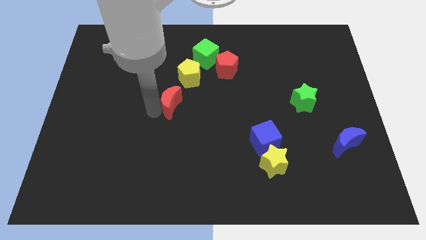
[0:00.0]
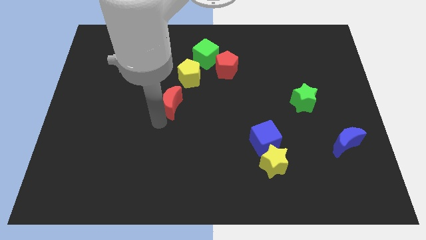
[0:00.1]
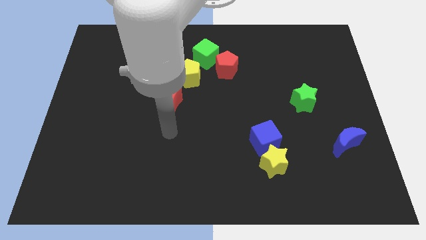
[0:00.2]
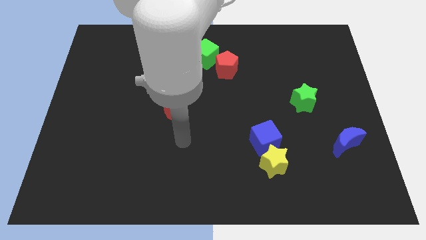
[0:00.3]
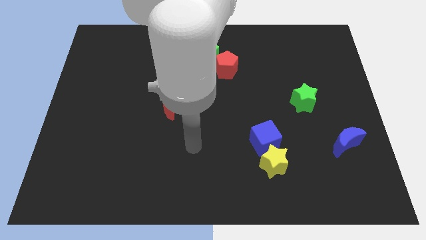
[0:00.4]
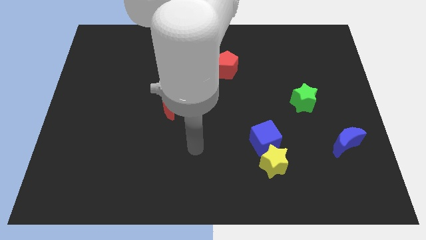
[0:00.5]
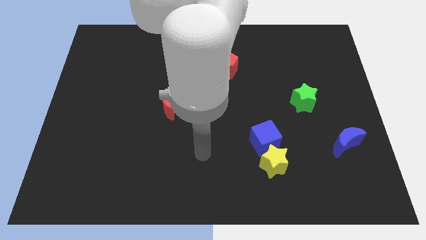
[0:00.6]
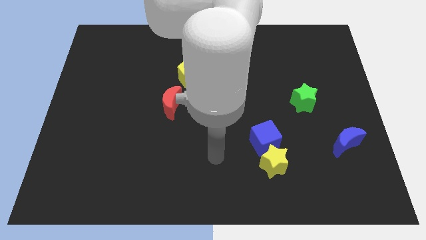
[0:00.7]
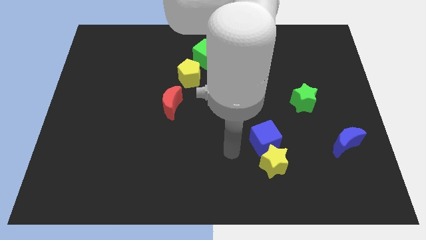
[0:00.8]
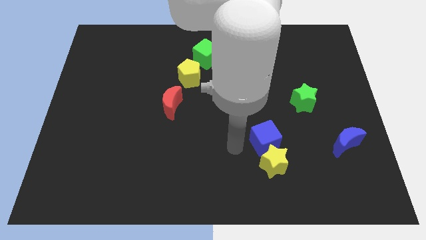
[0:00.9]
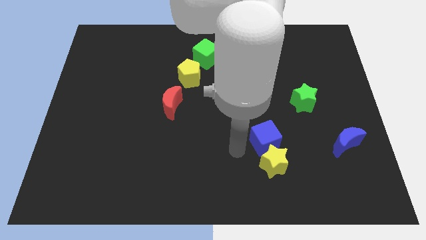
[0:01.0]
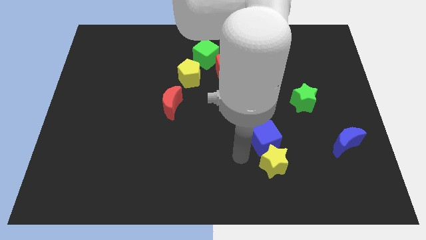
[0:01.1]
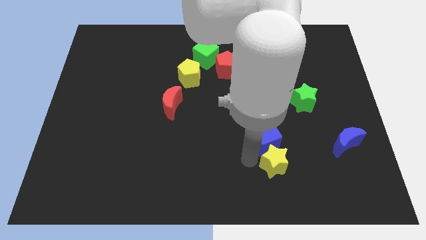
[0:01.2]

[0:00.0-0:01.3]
place the near to the yellow star

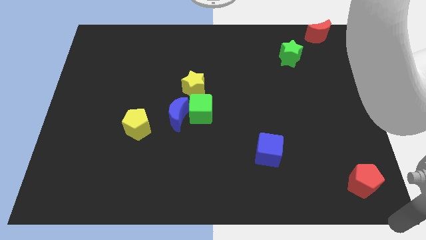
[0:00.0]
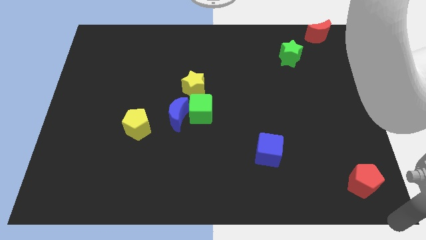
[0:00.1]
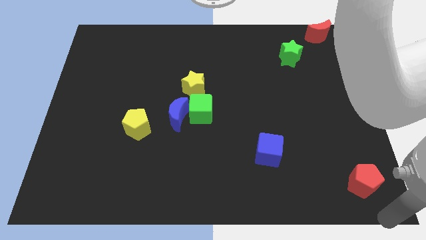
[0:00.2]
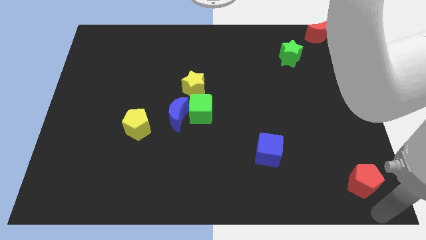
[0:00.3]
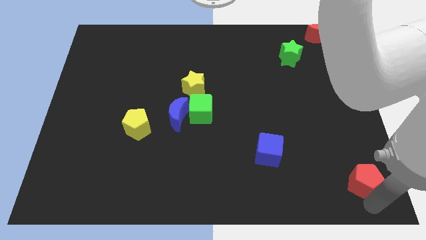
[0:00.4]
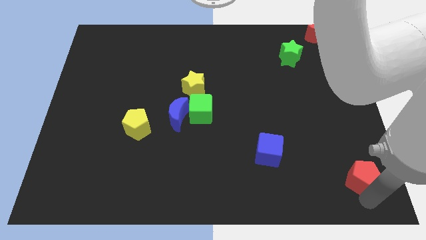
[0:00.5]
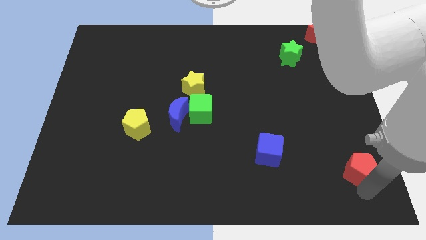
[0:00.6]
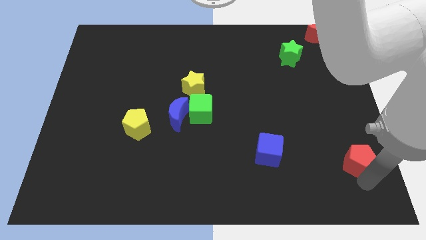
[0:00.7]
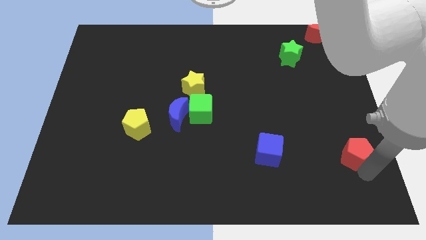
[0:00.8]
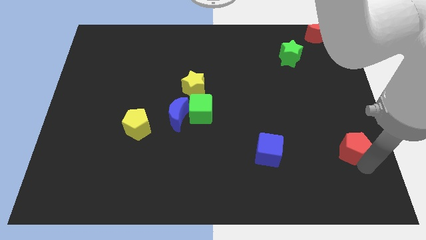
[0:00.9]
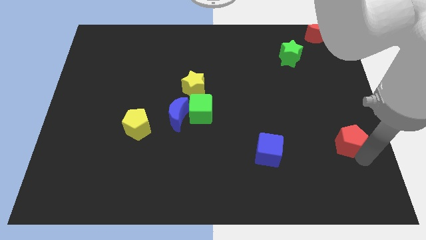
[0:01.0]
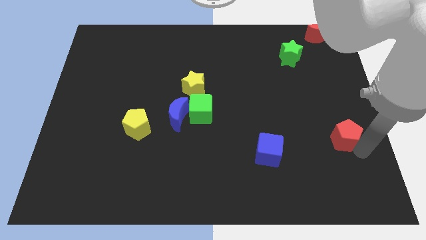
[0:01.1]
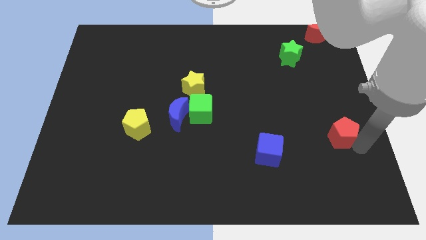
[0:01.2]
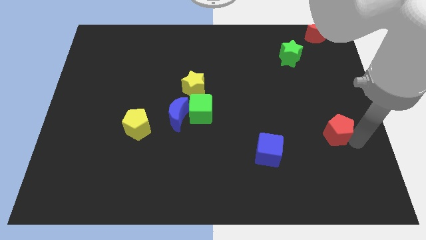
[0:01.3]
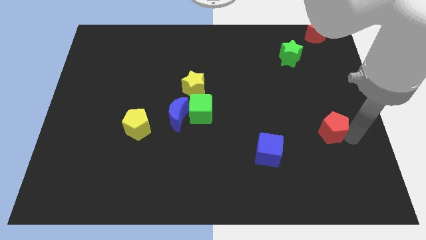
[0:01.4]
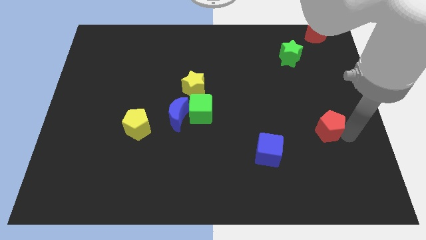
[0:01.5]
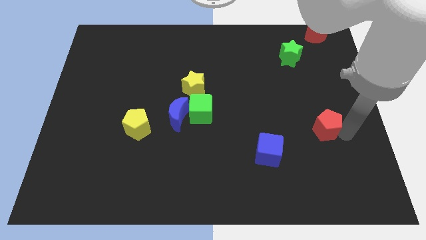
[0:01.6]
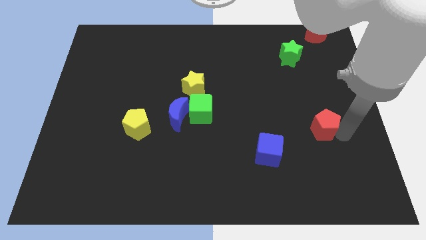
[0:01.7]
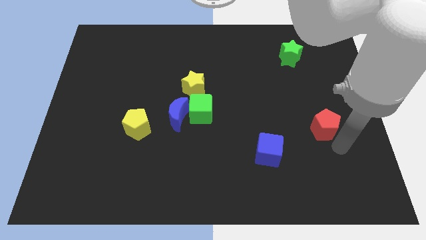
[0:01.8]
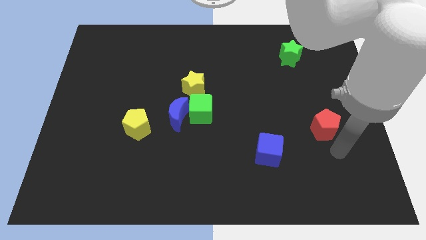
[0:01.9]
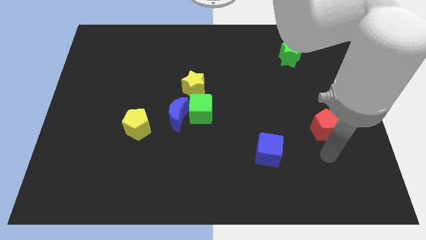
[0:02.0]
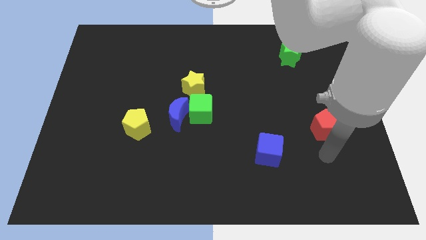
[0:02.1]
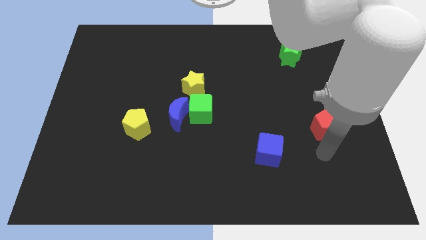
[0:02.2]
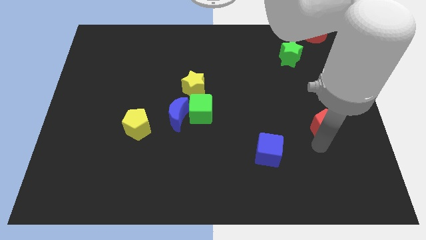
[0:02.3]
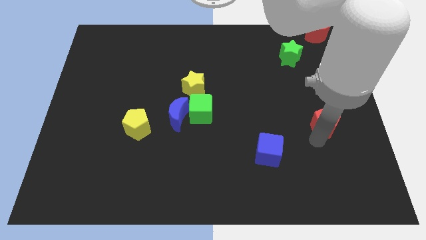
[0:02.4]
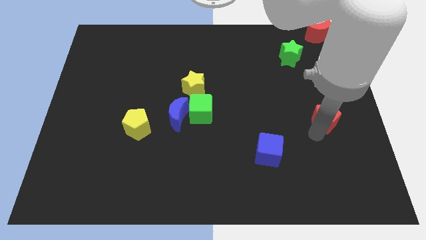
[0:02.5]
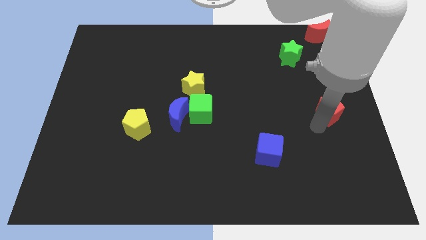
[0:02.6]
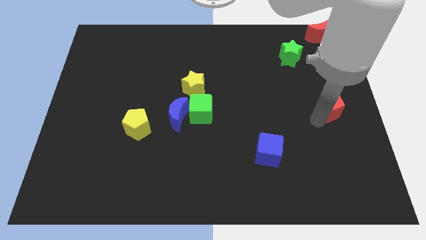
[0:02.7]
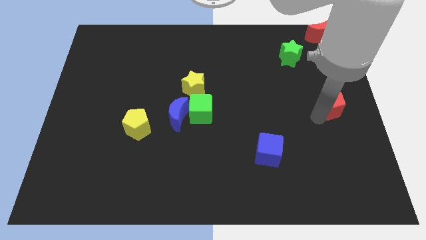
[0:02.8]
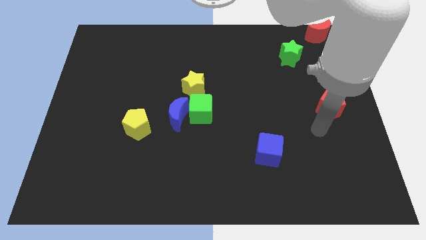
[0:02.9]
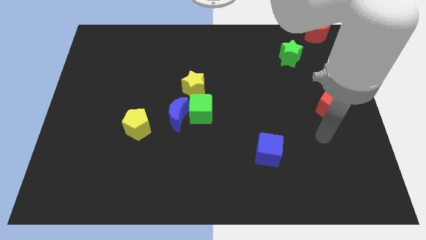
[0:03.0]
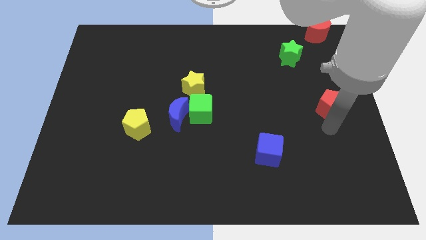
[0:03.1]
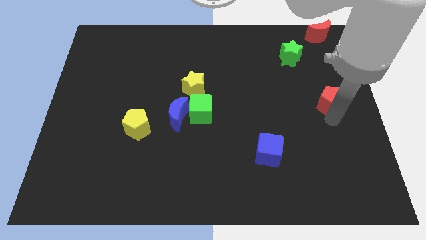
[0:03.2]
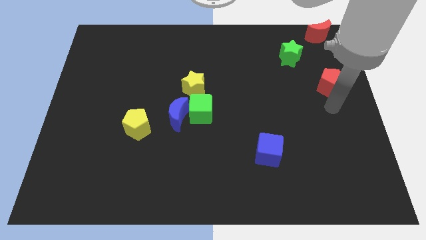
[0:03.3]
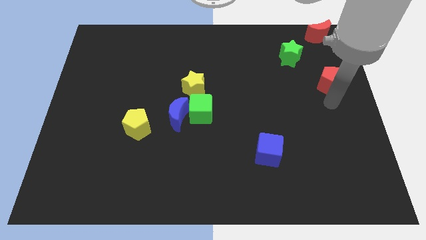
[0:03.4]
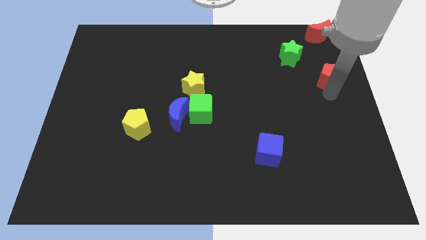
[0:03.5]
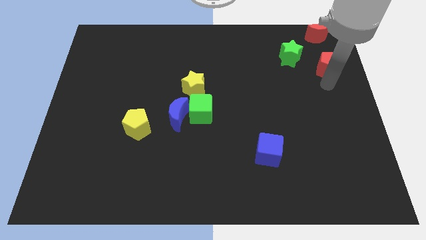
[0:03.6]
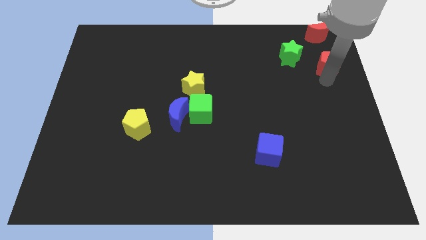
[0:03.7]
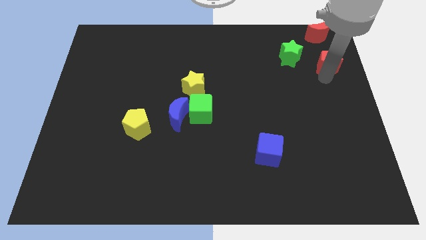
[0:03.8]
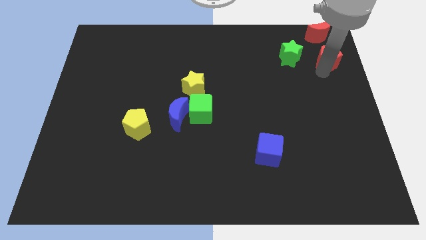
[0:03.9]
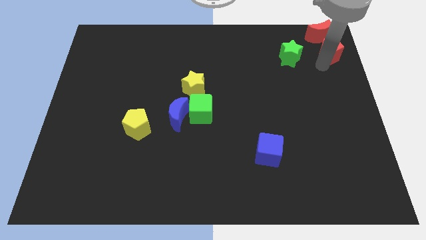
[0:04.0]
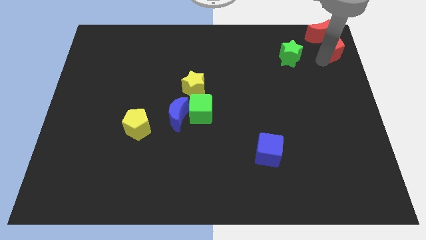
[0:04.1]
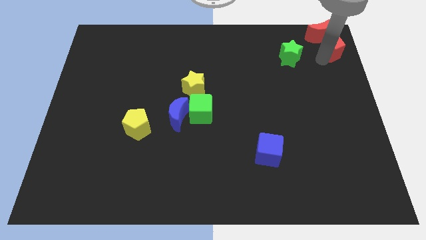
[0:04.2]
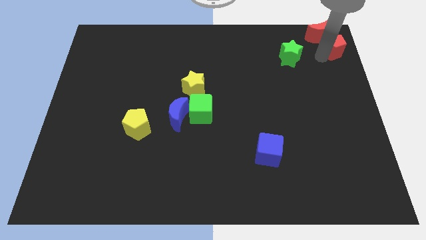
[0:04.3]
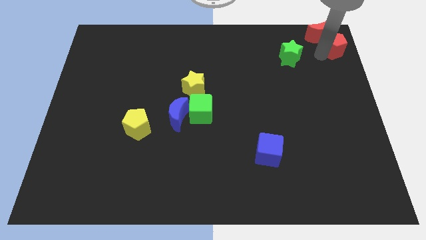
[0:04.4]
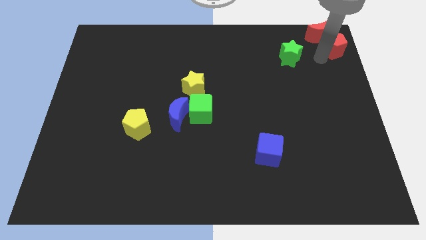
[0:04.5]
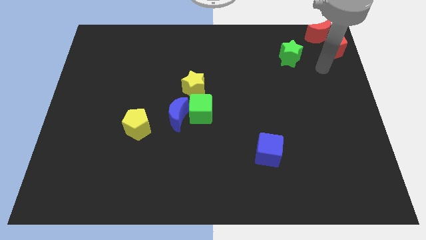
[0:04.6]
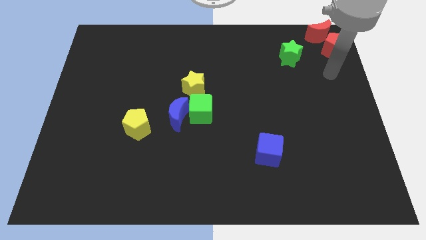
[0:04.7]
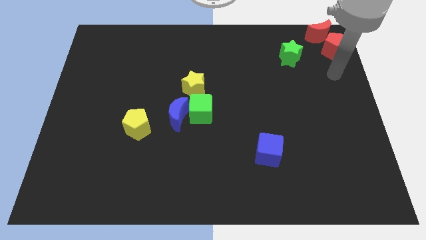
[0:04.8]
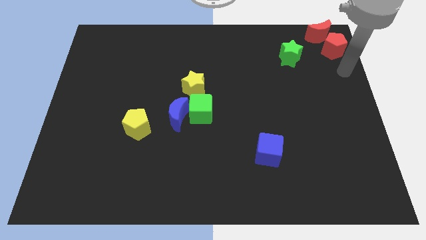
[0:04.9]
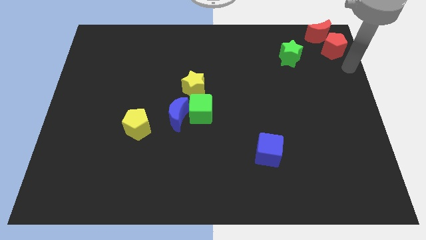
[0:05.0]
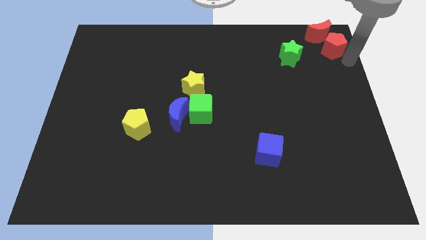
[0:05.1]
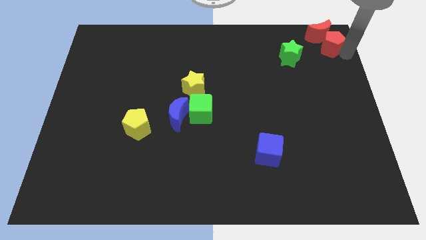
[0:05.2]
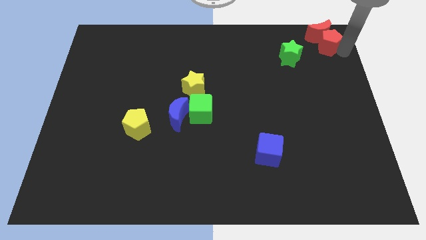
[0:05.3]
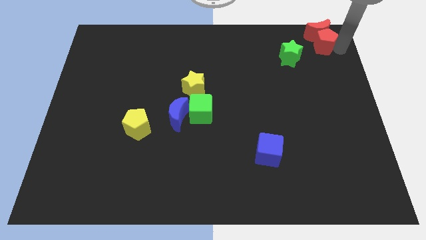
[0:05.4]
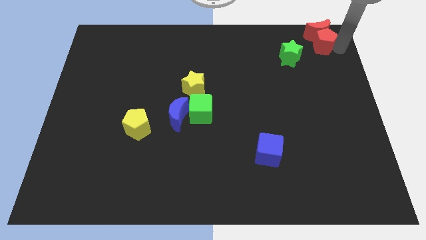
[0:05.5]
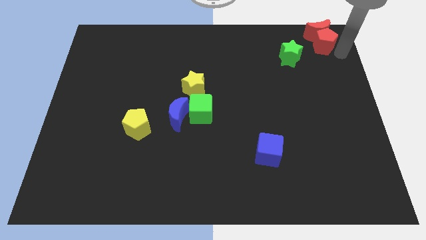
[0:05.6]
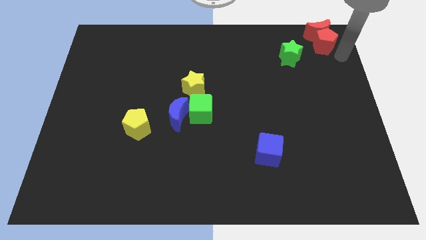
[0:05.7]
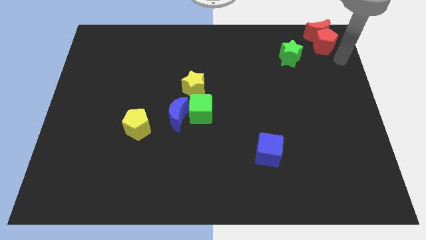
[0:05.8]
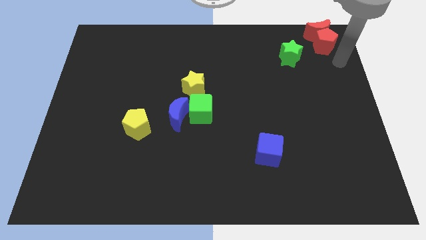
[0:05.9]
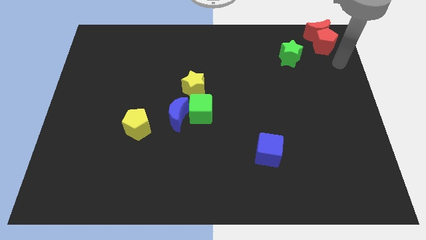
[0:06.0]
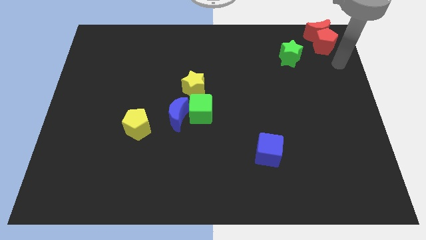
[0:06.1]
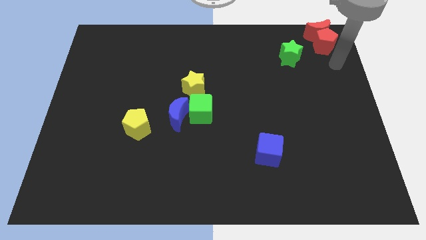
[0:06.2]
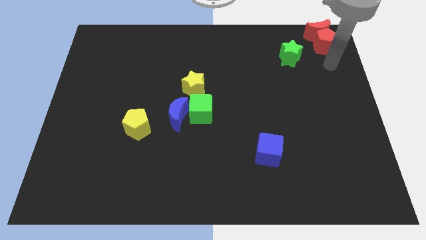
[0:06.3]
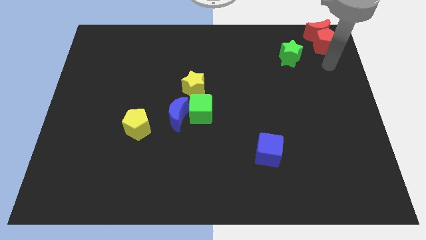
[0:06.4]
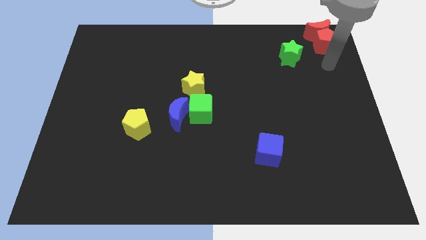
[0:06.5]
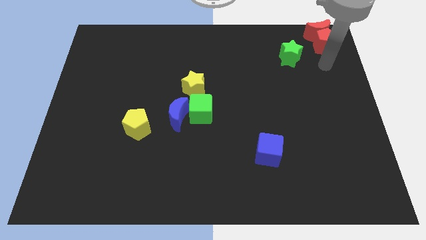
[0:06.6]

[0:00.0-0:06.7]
push the red pentagon into the red crescent

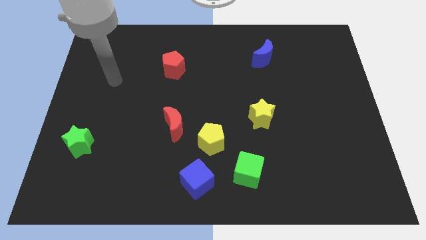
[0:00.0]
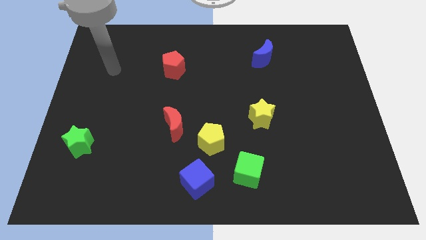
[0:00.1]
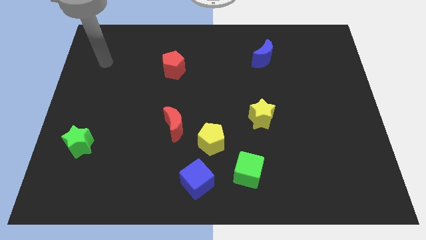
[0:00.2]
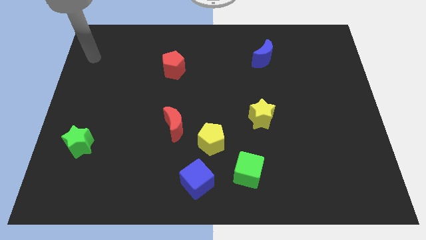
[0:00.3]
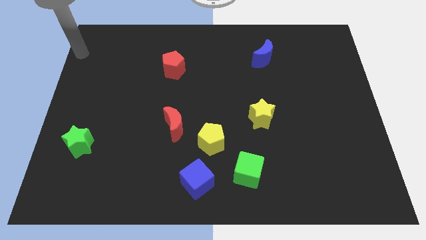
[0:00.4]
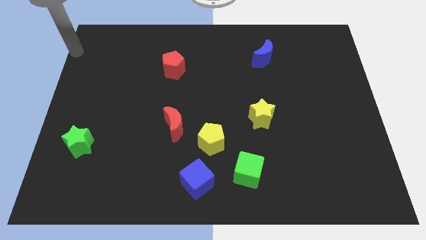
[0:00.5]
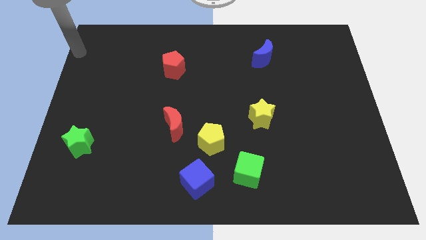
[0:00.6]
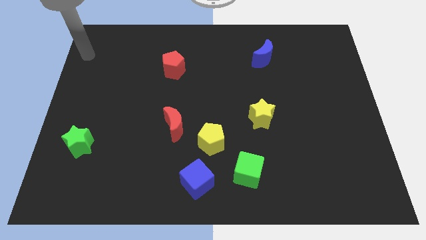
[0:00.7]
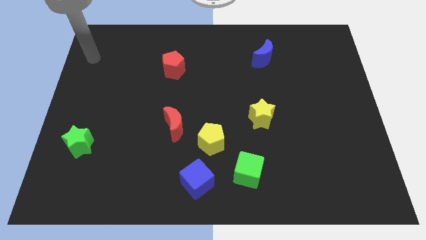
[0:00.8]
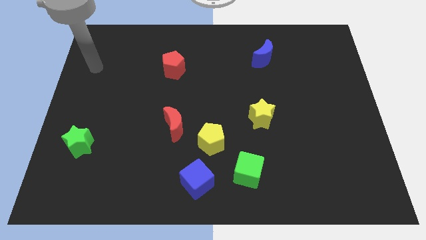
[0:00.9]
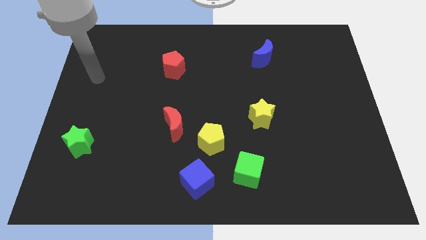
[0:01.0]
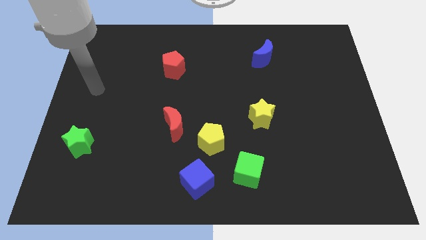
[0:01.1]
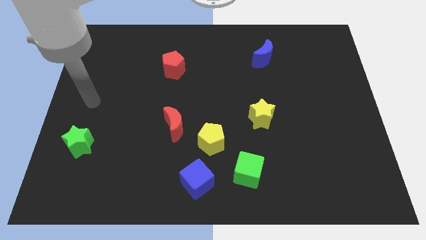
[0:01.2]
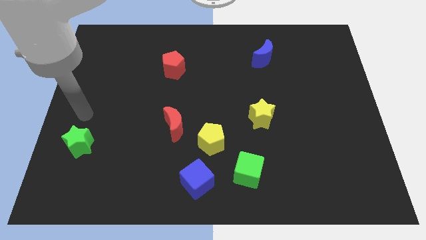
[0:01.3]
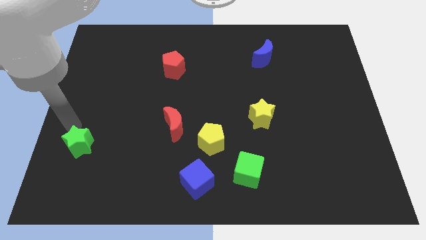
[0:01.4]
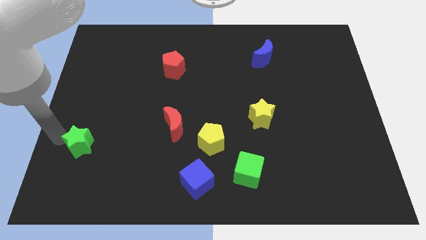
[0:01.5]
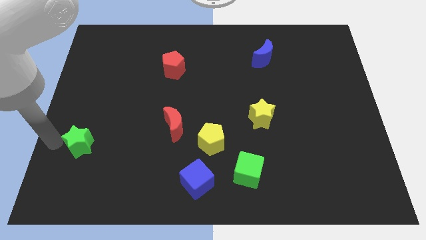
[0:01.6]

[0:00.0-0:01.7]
touch the green star
